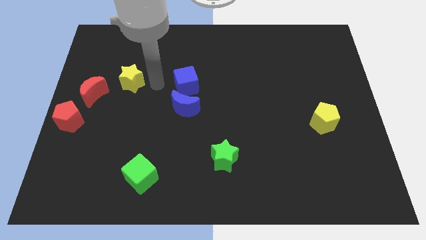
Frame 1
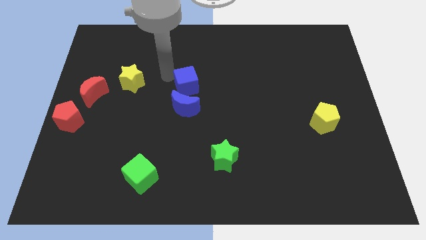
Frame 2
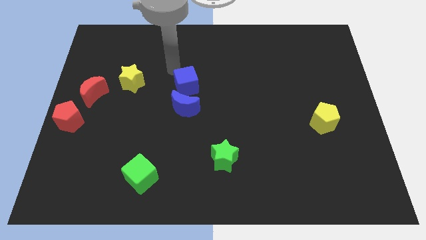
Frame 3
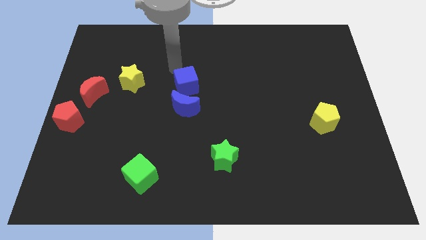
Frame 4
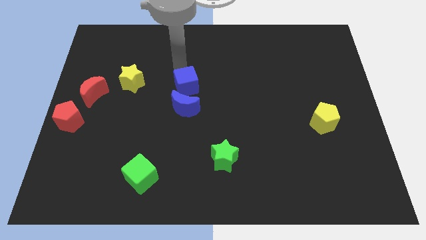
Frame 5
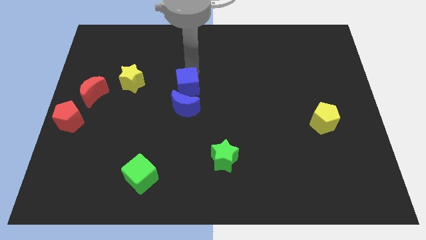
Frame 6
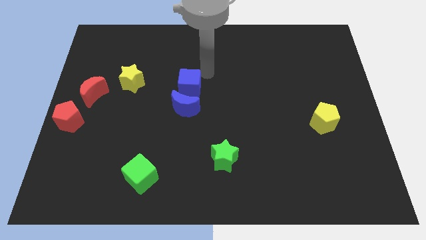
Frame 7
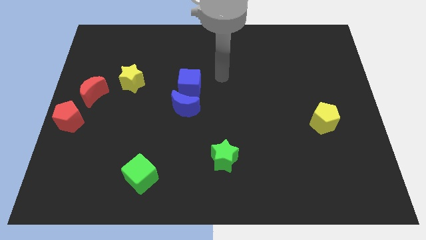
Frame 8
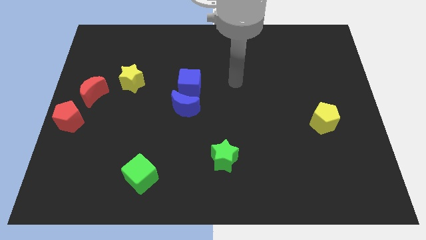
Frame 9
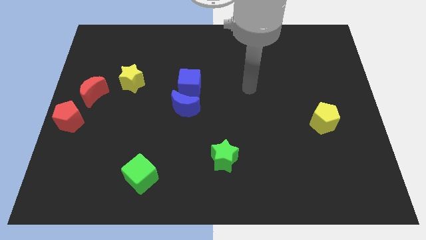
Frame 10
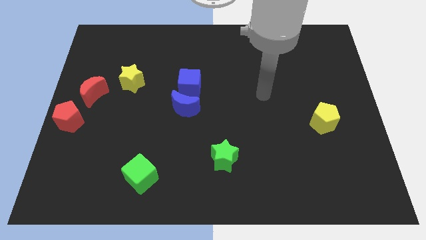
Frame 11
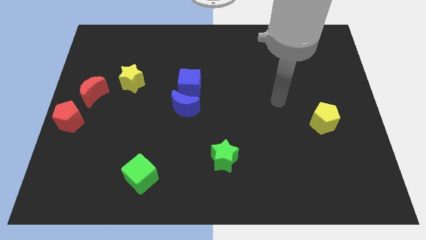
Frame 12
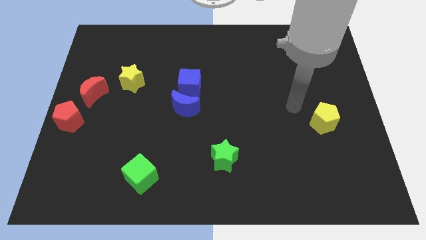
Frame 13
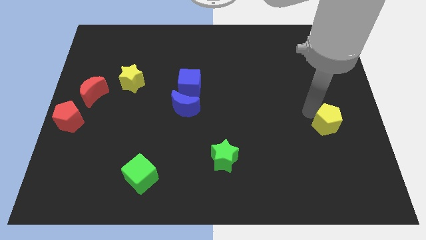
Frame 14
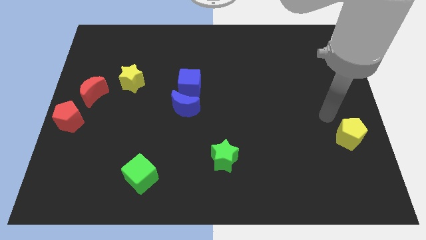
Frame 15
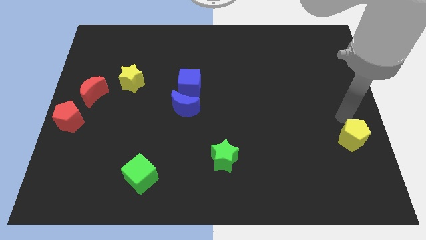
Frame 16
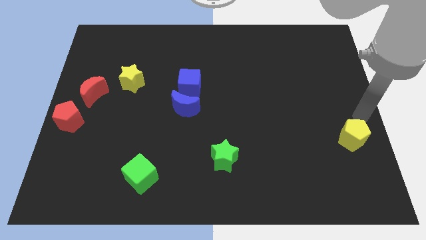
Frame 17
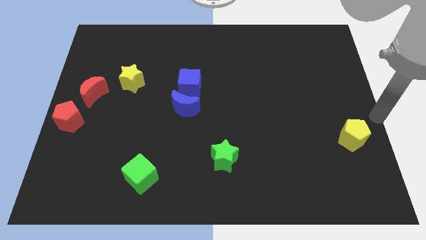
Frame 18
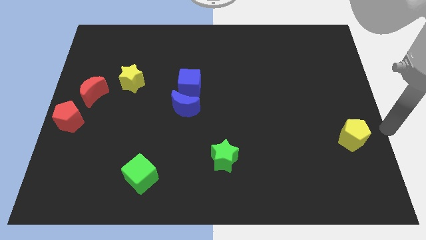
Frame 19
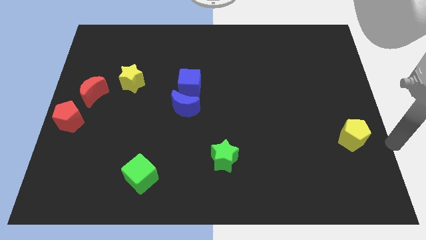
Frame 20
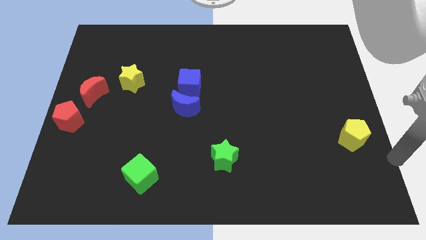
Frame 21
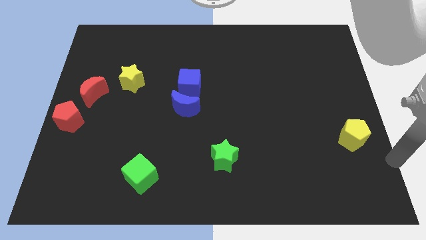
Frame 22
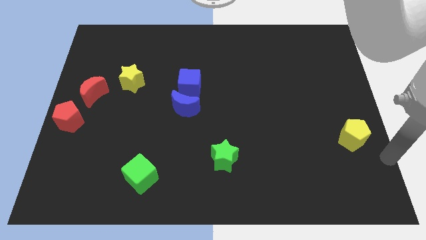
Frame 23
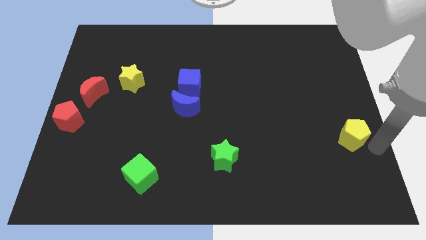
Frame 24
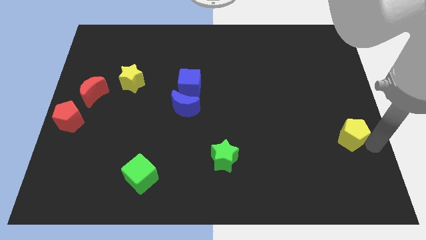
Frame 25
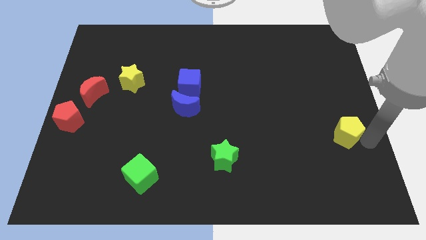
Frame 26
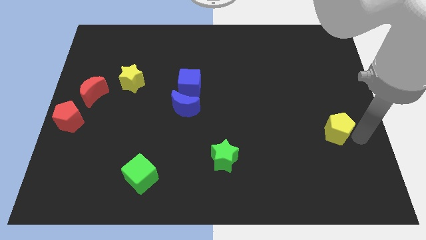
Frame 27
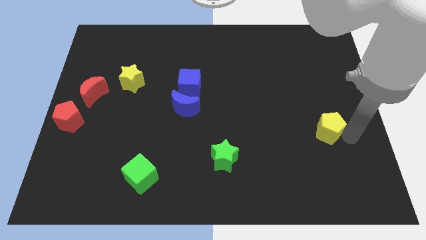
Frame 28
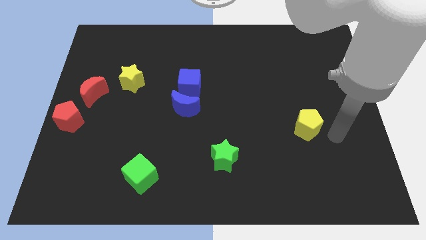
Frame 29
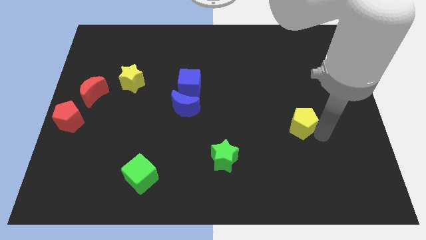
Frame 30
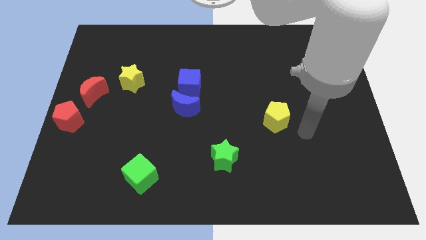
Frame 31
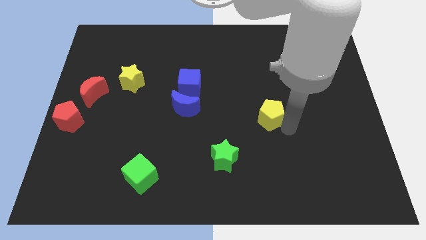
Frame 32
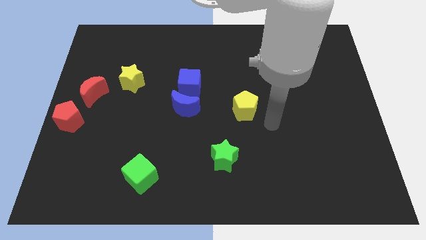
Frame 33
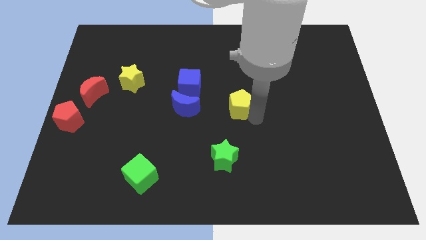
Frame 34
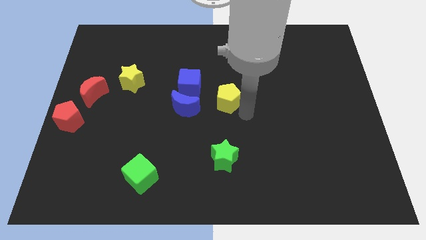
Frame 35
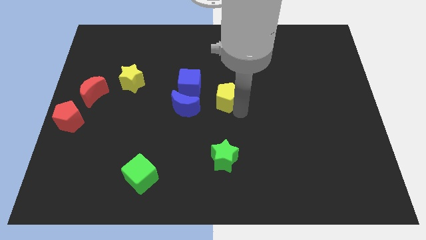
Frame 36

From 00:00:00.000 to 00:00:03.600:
move the yellow pentagon vertically above the green star

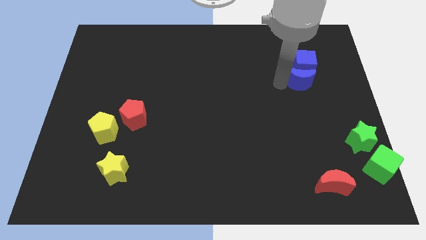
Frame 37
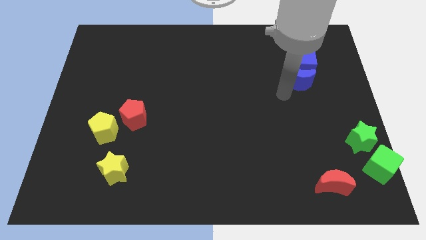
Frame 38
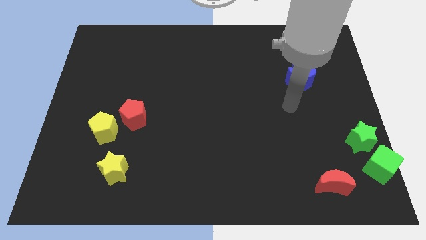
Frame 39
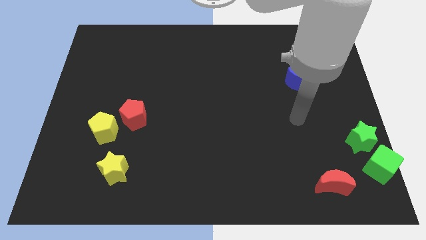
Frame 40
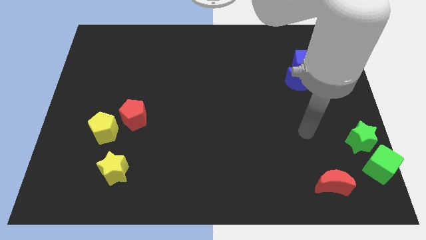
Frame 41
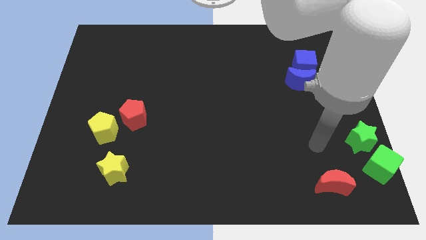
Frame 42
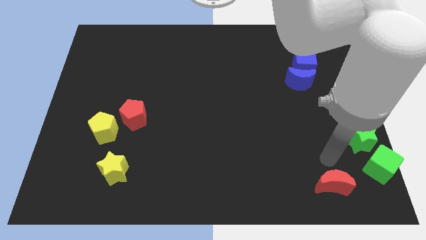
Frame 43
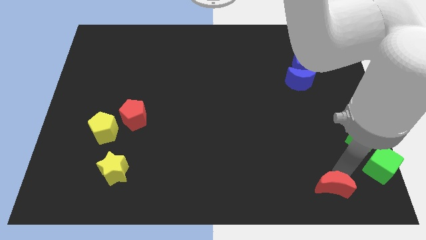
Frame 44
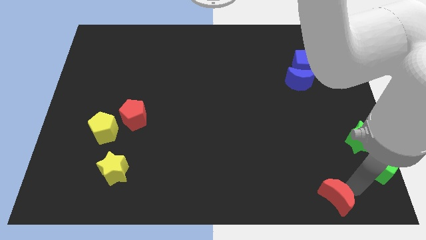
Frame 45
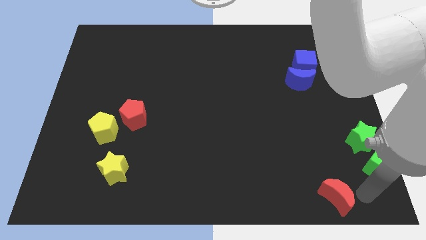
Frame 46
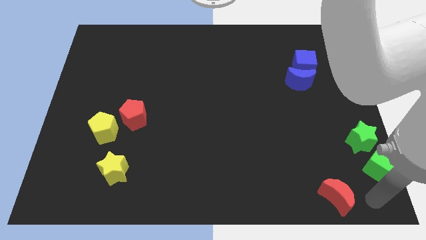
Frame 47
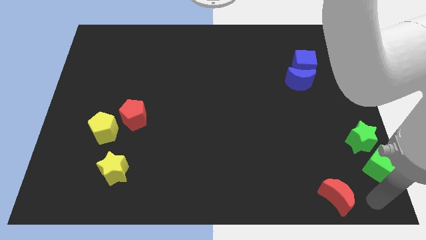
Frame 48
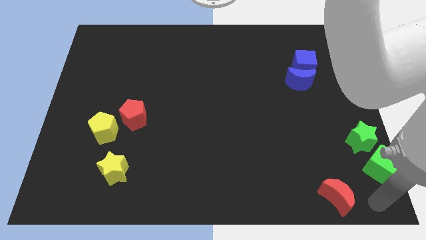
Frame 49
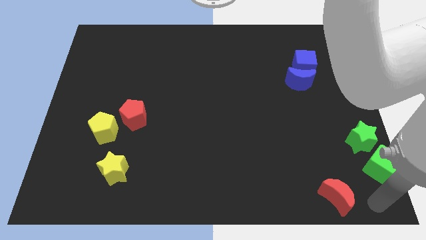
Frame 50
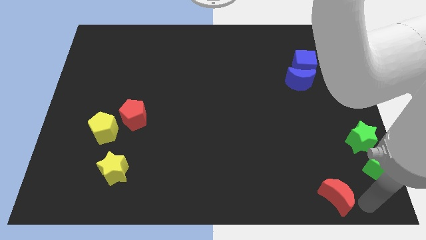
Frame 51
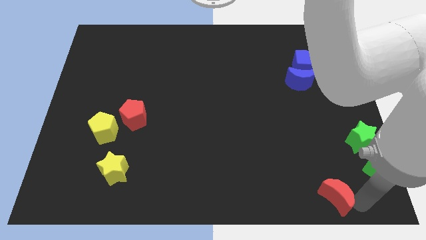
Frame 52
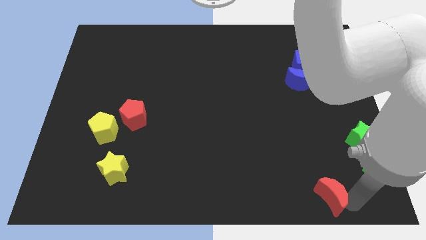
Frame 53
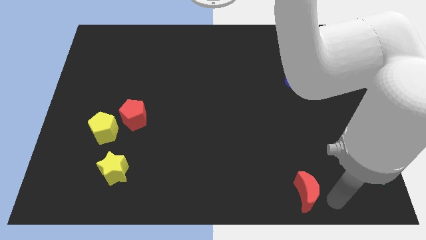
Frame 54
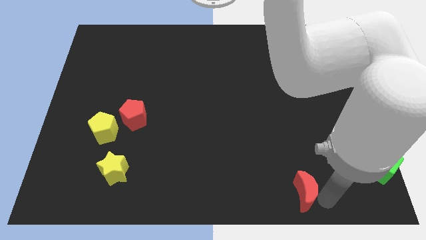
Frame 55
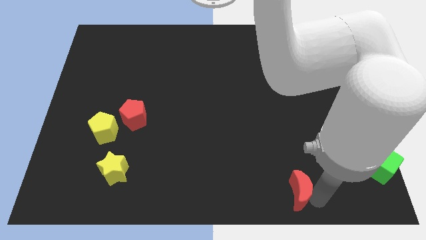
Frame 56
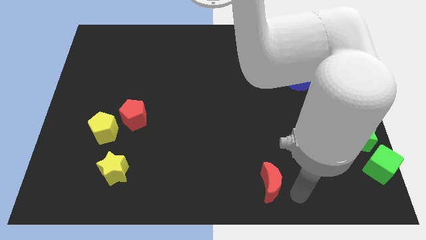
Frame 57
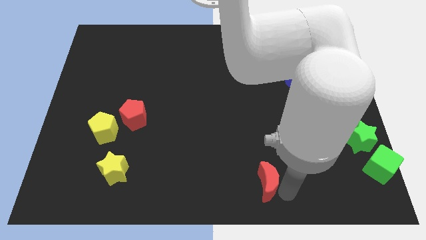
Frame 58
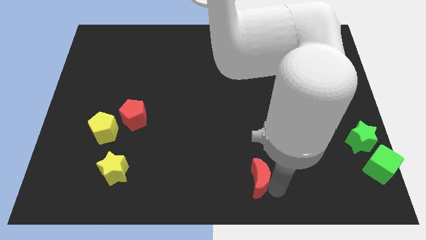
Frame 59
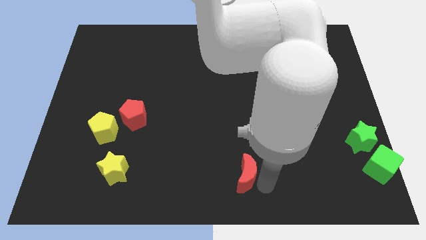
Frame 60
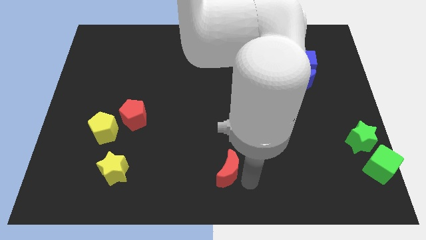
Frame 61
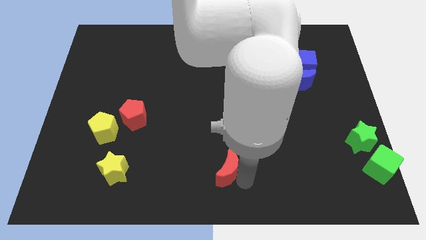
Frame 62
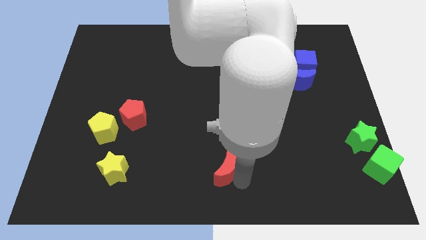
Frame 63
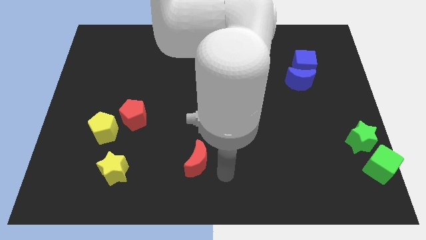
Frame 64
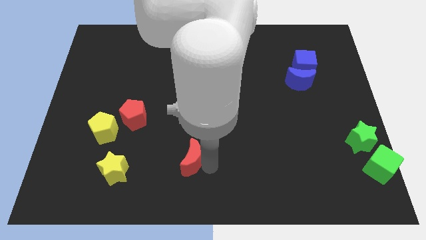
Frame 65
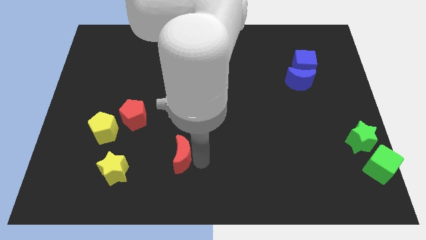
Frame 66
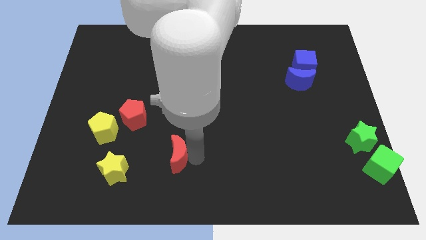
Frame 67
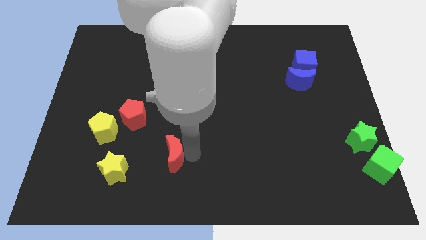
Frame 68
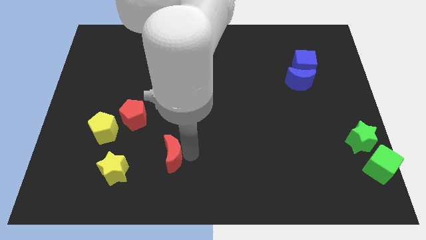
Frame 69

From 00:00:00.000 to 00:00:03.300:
move red crescent horizontally right side of yellow star

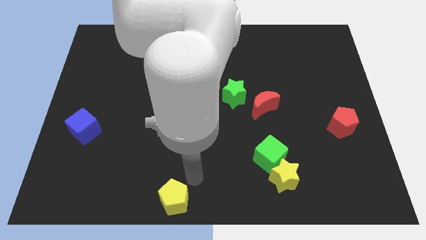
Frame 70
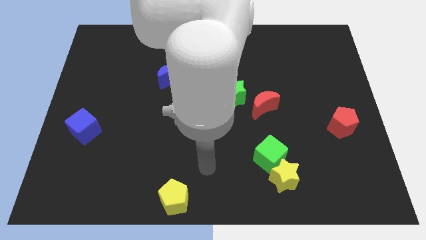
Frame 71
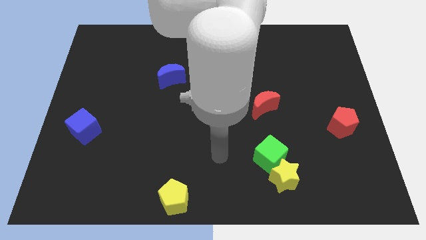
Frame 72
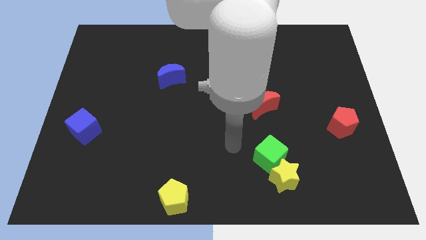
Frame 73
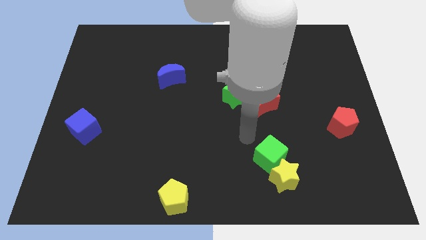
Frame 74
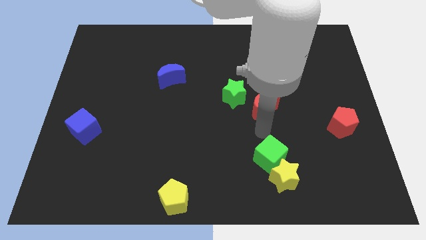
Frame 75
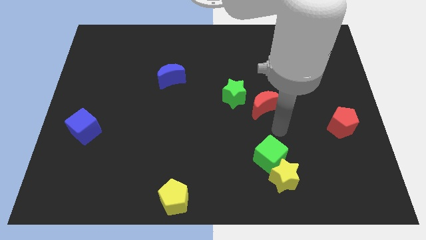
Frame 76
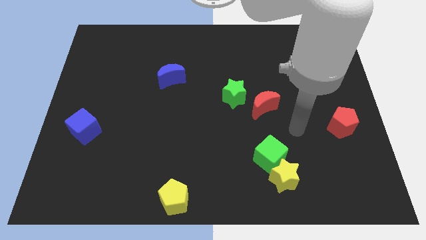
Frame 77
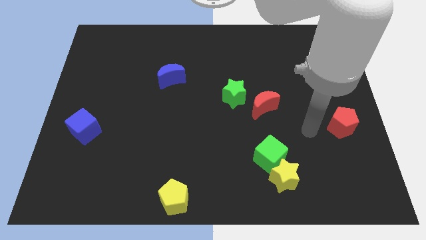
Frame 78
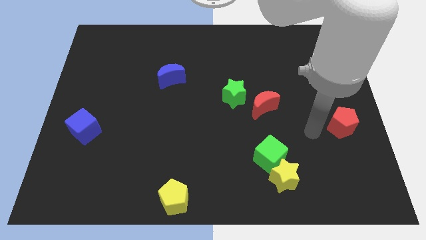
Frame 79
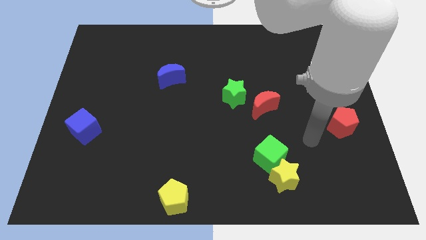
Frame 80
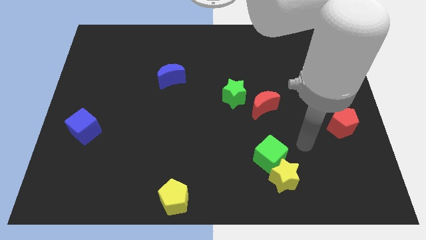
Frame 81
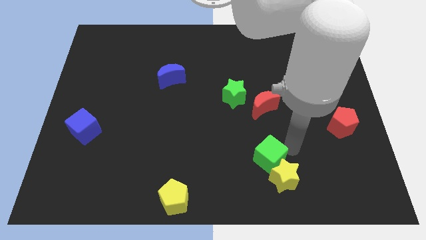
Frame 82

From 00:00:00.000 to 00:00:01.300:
move your arm towards the green cube

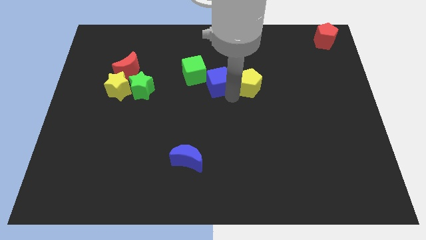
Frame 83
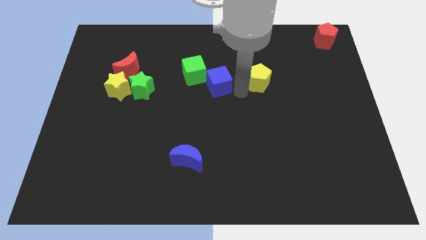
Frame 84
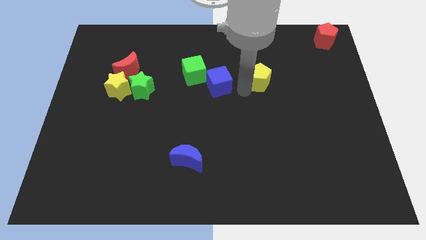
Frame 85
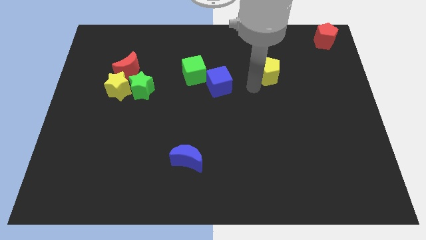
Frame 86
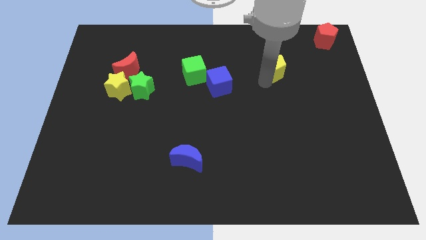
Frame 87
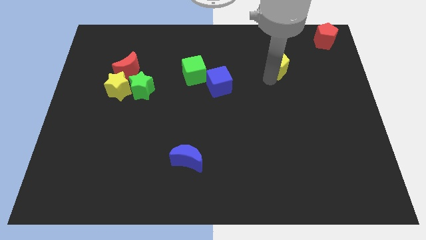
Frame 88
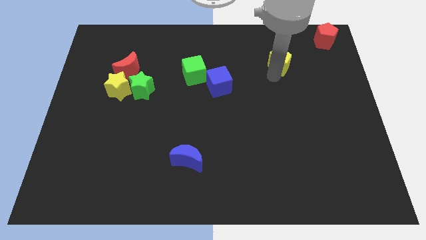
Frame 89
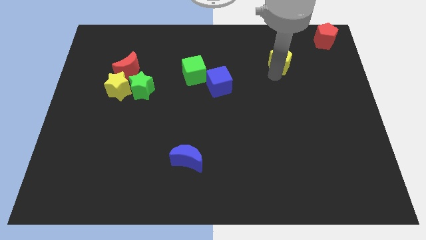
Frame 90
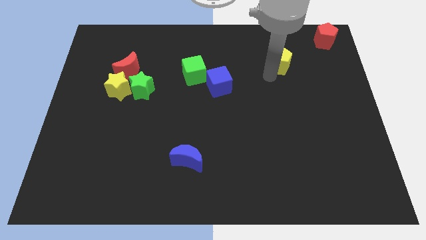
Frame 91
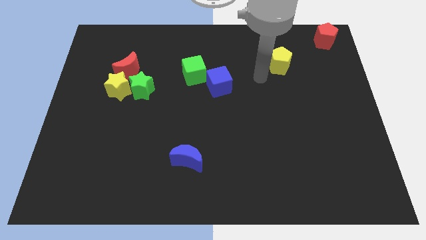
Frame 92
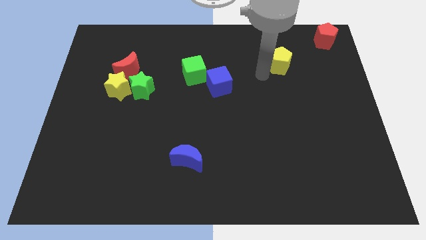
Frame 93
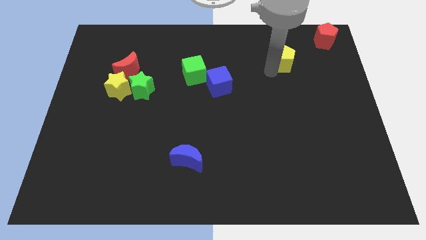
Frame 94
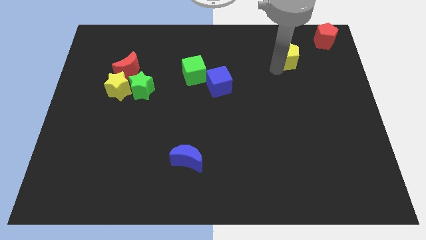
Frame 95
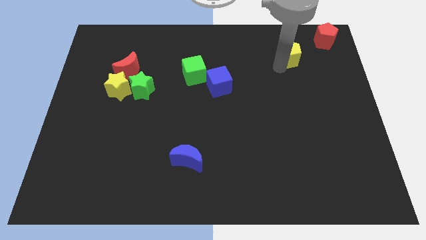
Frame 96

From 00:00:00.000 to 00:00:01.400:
move yellow pentagon towards the red pentagon
